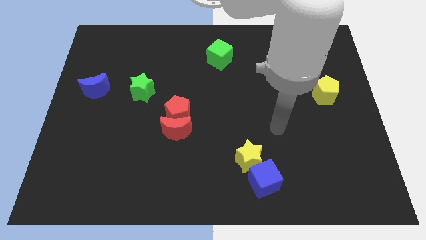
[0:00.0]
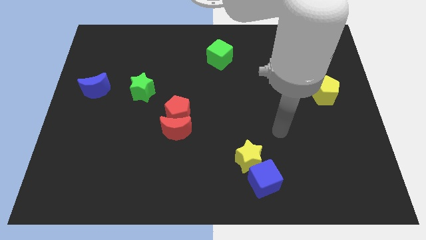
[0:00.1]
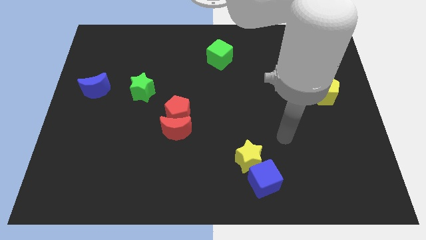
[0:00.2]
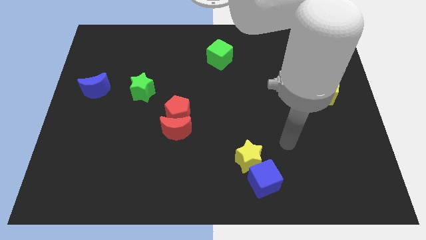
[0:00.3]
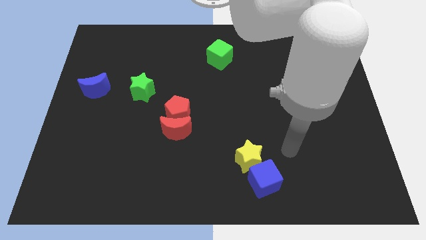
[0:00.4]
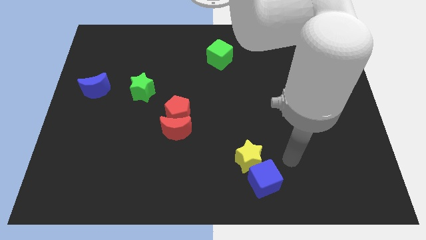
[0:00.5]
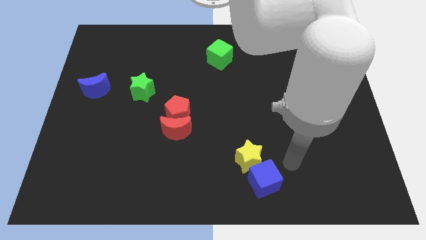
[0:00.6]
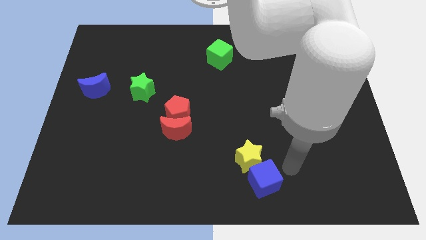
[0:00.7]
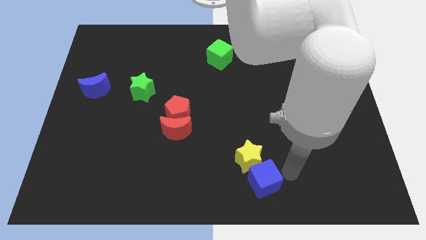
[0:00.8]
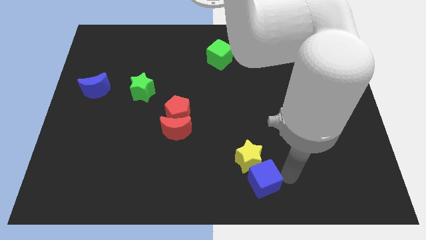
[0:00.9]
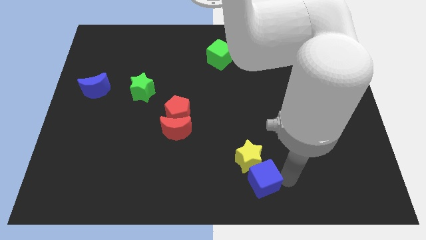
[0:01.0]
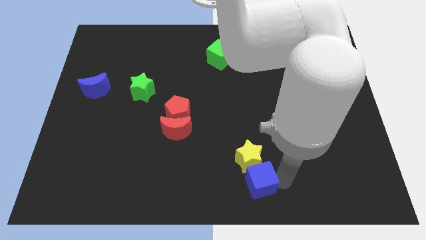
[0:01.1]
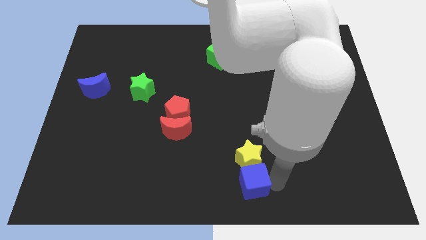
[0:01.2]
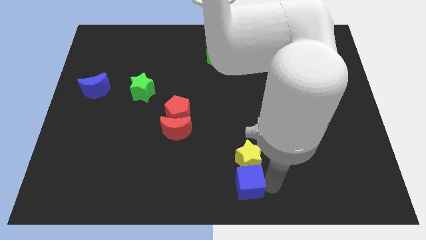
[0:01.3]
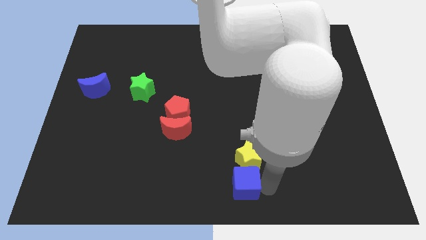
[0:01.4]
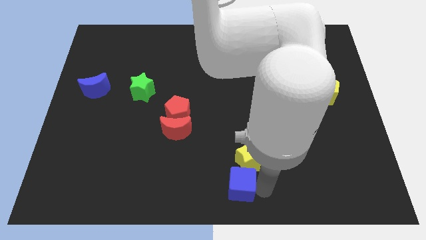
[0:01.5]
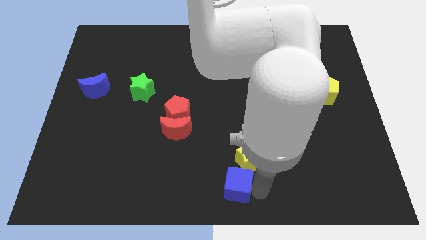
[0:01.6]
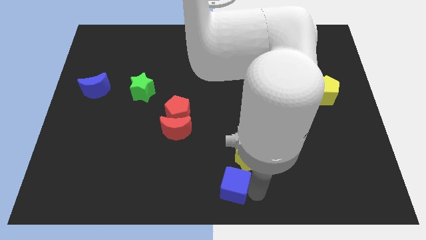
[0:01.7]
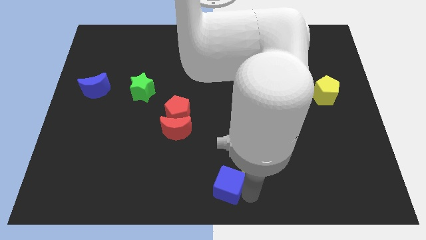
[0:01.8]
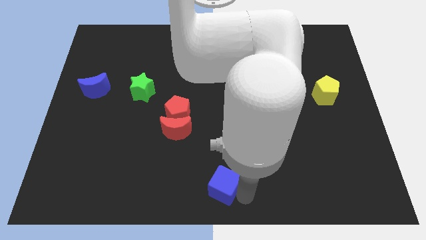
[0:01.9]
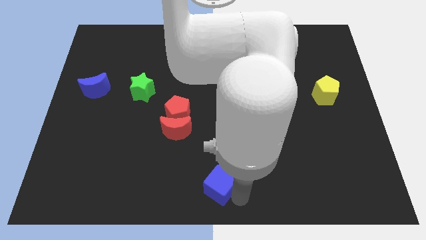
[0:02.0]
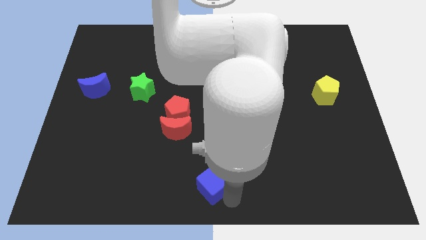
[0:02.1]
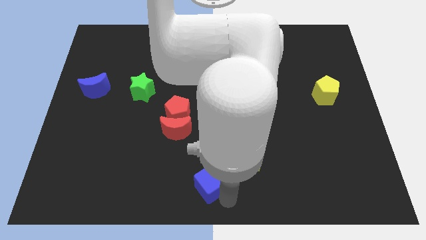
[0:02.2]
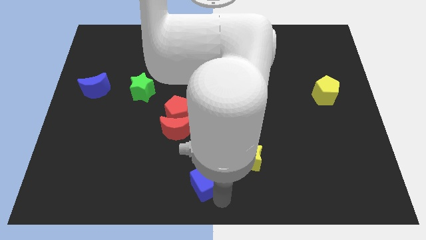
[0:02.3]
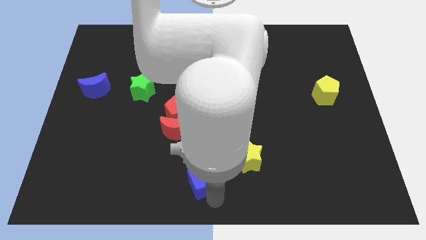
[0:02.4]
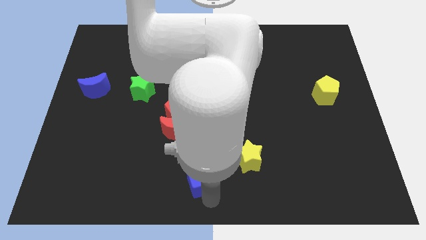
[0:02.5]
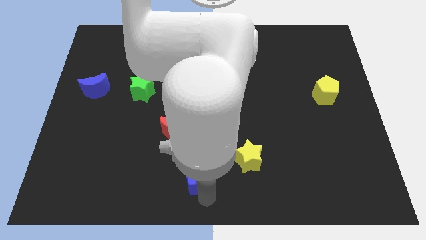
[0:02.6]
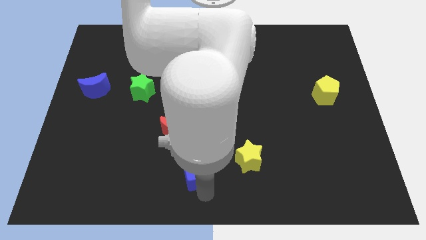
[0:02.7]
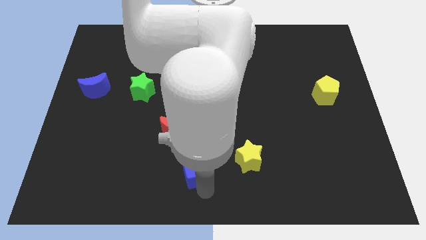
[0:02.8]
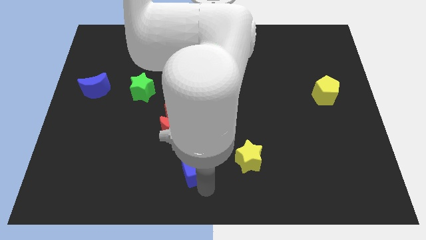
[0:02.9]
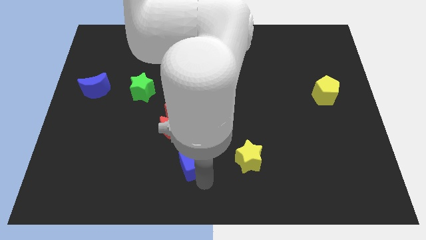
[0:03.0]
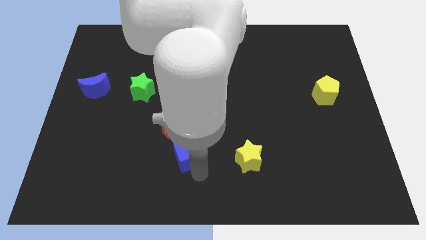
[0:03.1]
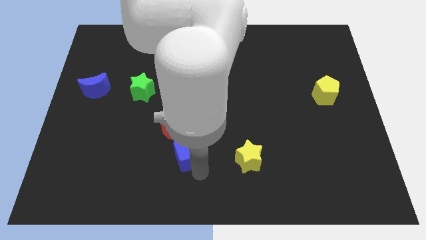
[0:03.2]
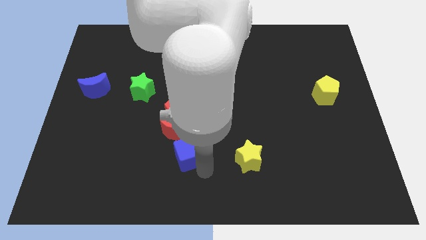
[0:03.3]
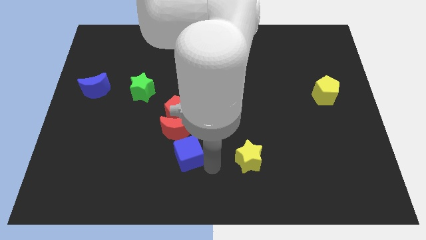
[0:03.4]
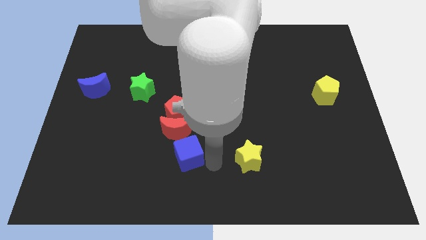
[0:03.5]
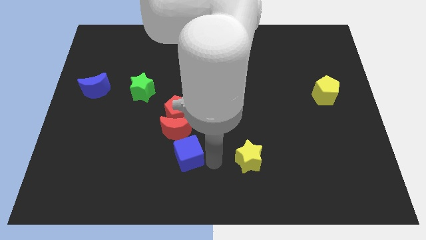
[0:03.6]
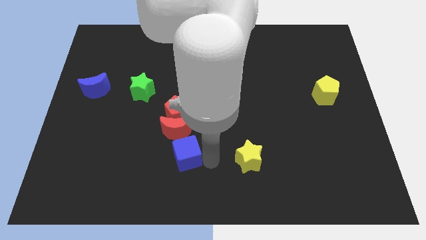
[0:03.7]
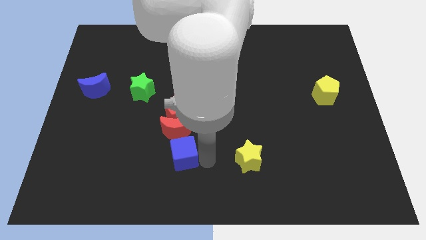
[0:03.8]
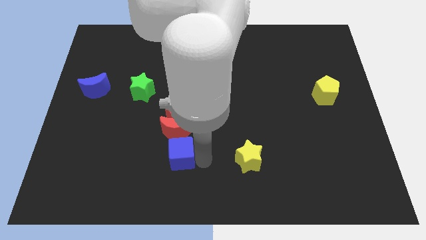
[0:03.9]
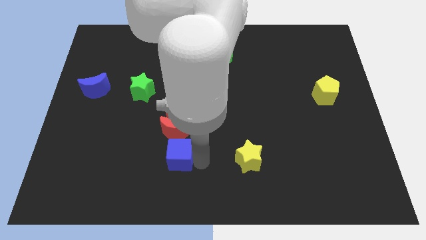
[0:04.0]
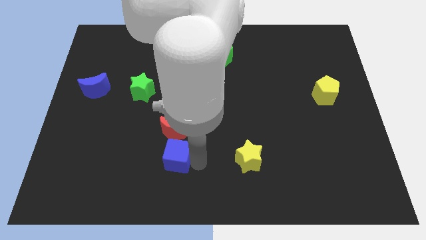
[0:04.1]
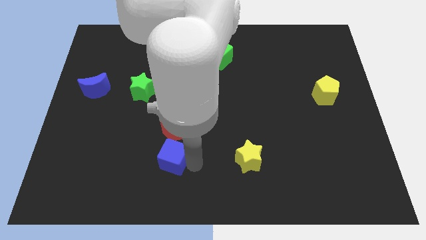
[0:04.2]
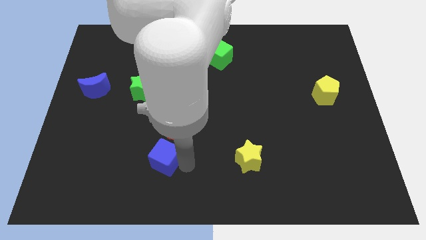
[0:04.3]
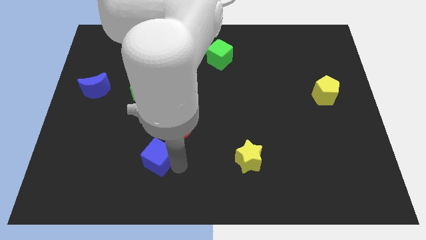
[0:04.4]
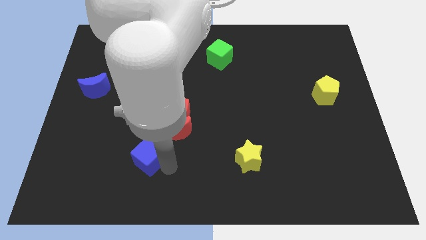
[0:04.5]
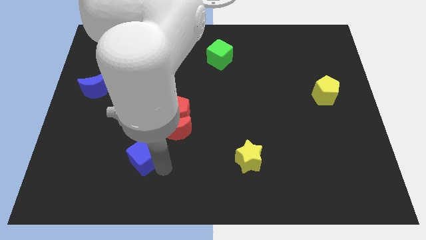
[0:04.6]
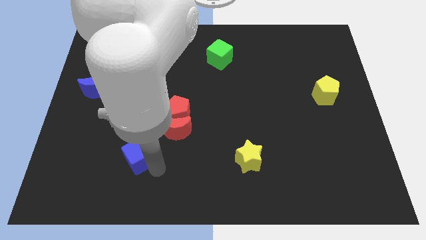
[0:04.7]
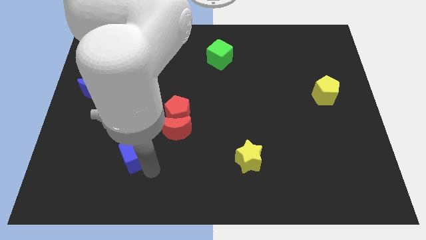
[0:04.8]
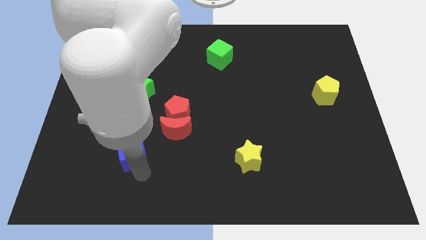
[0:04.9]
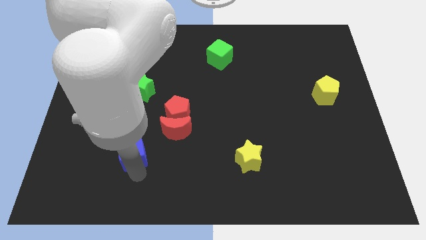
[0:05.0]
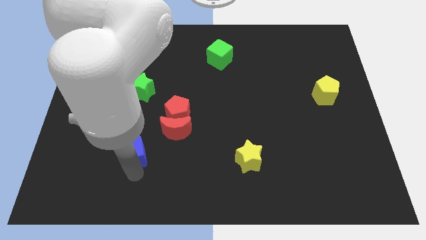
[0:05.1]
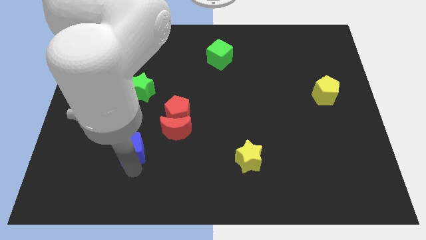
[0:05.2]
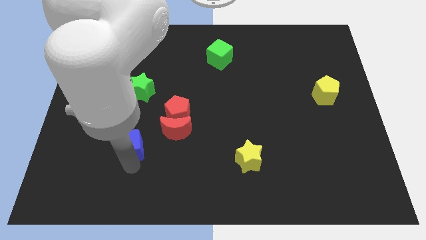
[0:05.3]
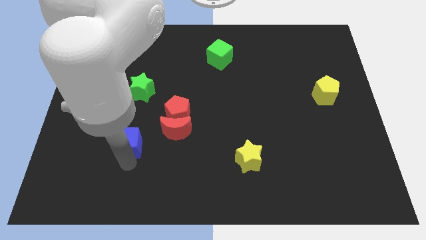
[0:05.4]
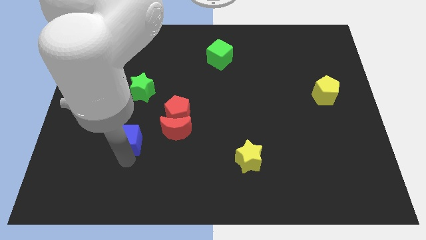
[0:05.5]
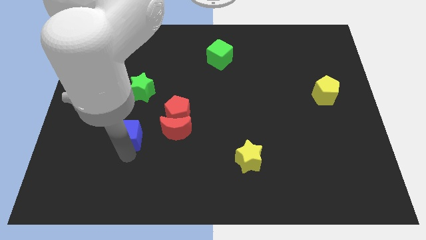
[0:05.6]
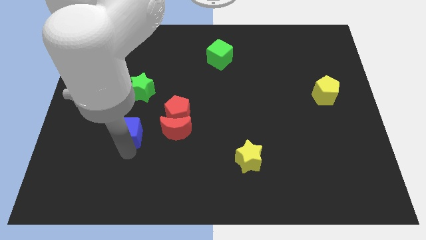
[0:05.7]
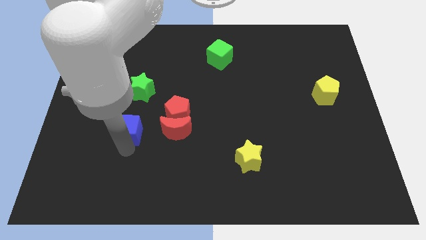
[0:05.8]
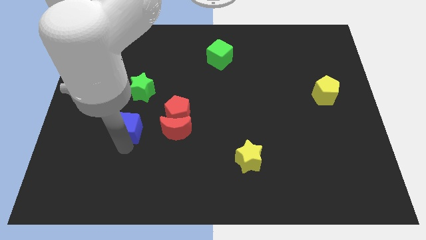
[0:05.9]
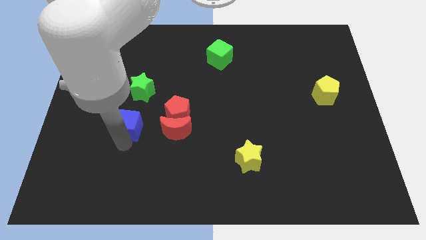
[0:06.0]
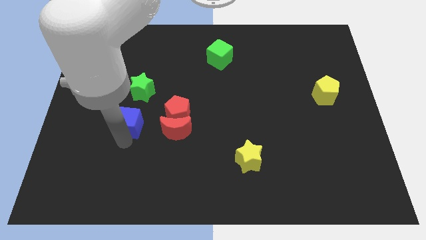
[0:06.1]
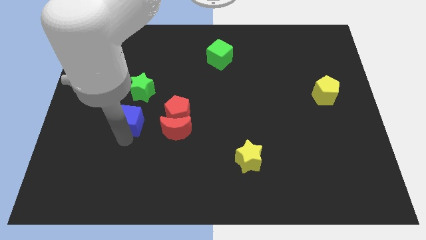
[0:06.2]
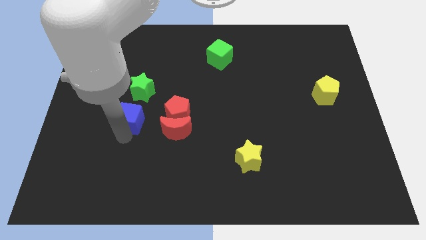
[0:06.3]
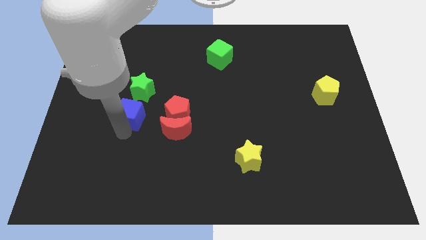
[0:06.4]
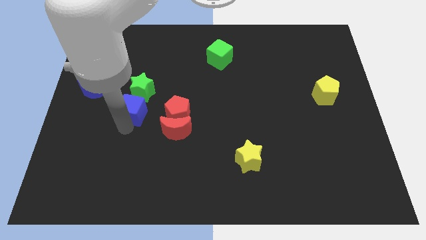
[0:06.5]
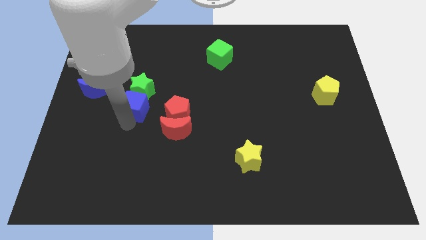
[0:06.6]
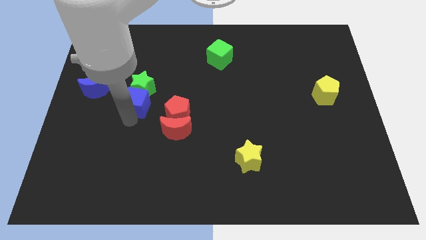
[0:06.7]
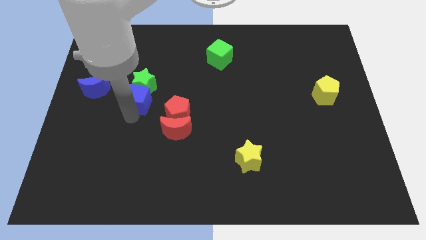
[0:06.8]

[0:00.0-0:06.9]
slide the blue cube next to the green star

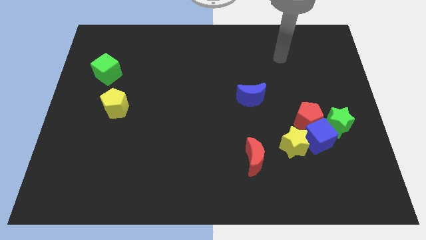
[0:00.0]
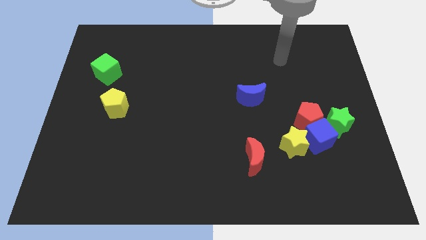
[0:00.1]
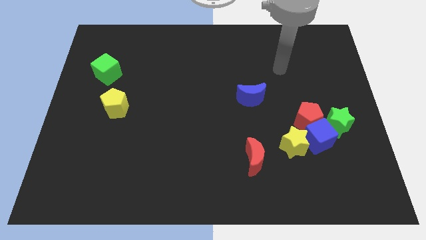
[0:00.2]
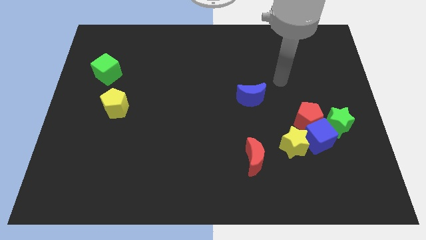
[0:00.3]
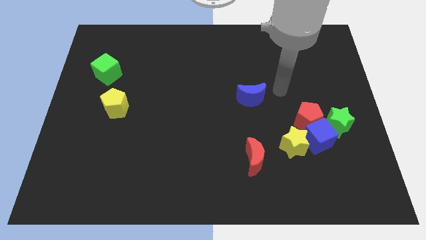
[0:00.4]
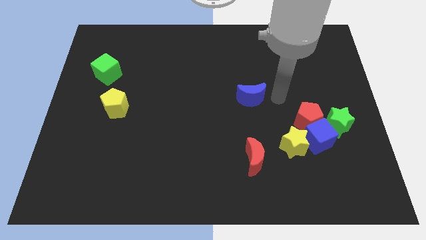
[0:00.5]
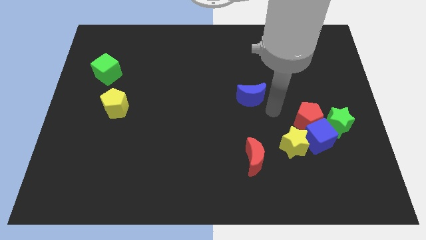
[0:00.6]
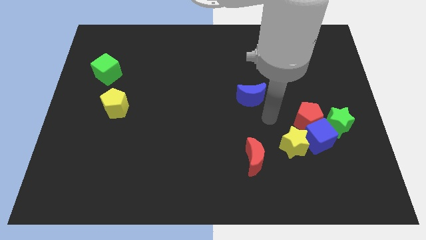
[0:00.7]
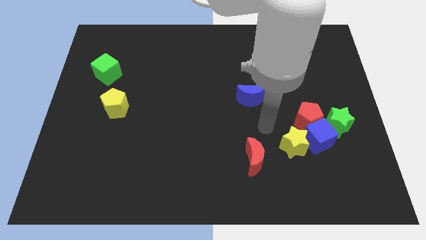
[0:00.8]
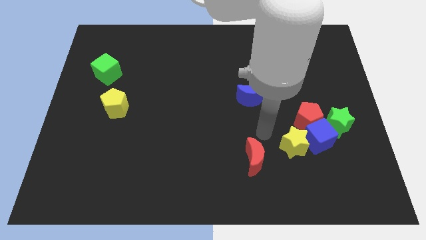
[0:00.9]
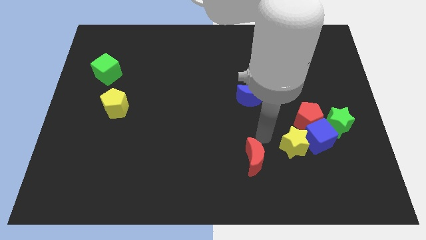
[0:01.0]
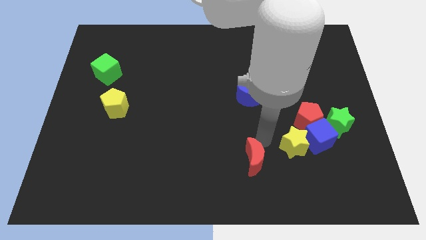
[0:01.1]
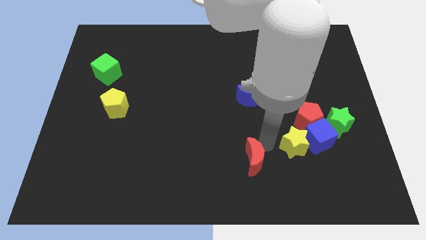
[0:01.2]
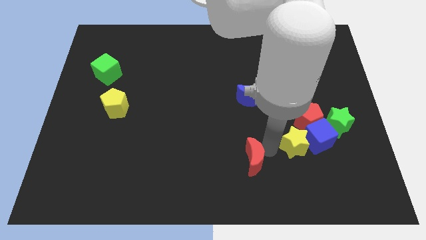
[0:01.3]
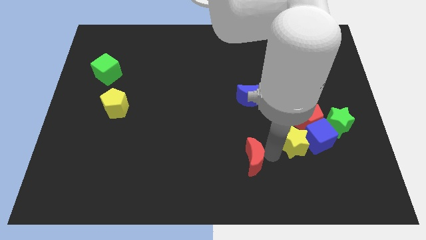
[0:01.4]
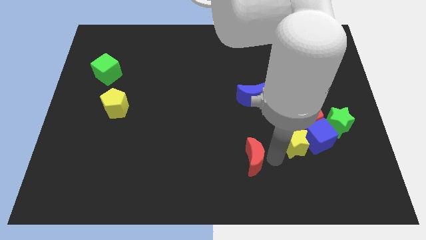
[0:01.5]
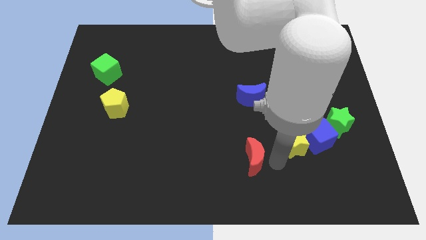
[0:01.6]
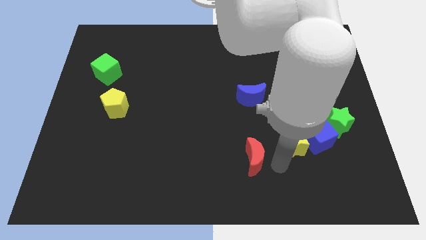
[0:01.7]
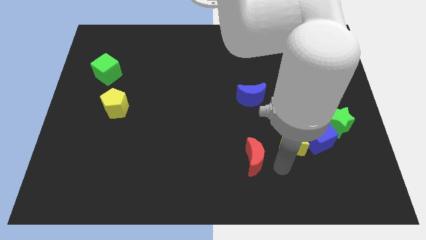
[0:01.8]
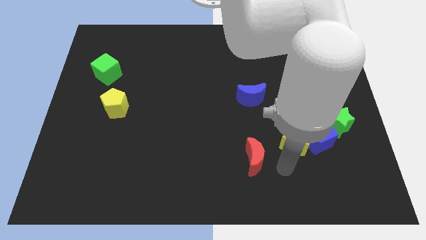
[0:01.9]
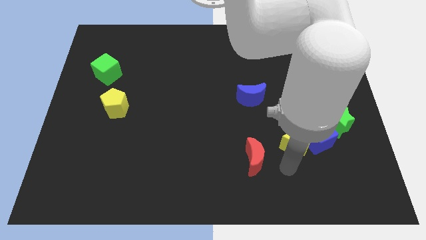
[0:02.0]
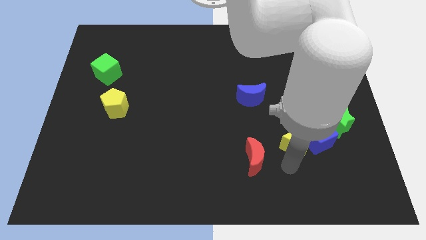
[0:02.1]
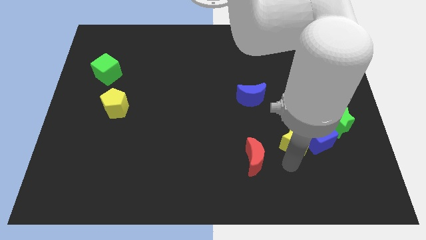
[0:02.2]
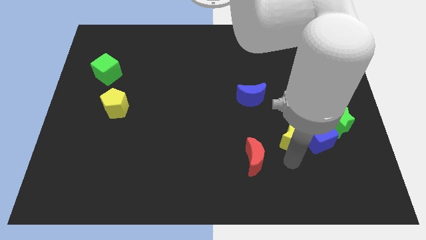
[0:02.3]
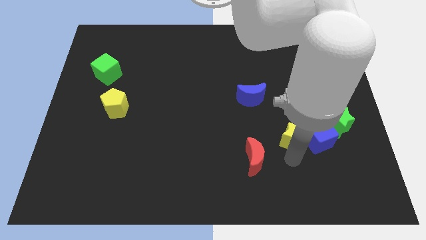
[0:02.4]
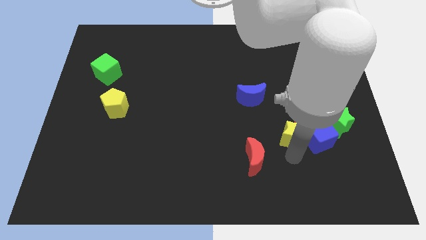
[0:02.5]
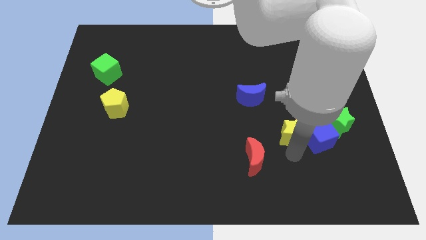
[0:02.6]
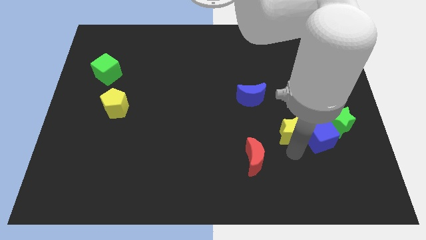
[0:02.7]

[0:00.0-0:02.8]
slide the yellow star next to the red pentagon
